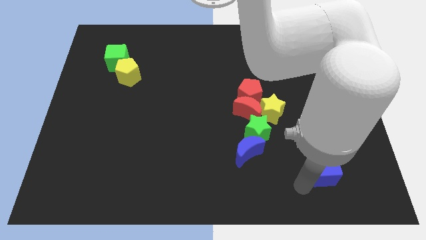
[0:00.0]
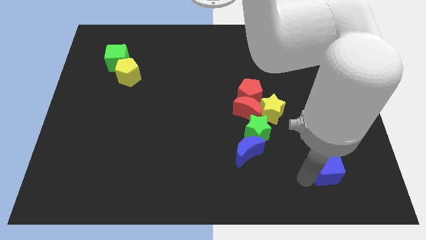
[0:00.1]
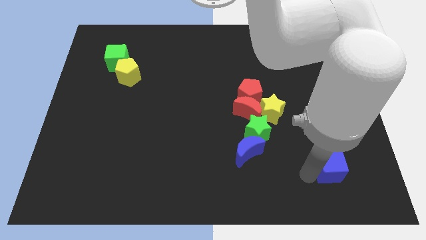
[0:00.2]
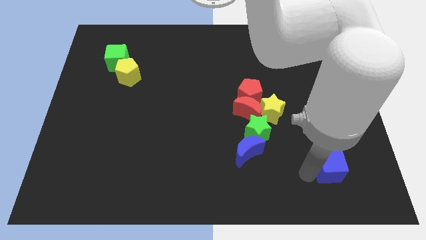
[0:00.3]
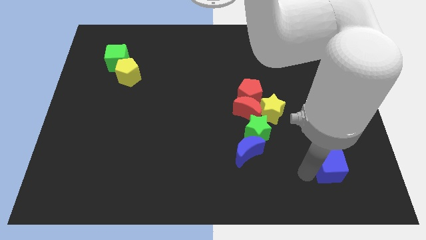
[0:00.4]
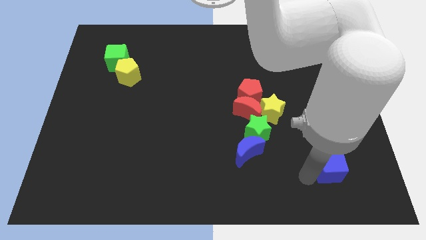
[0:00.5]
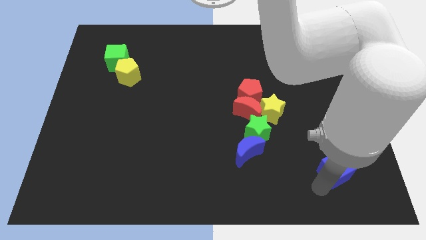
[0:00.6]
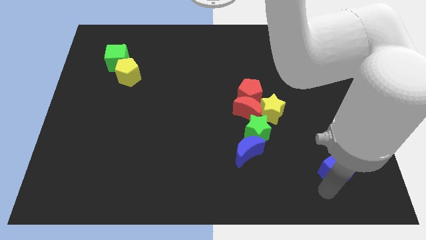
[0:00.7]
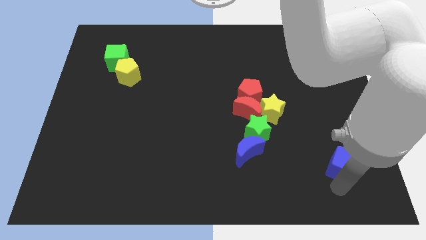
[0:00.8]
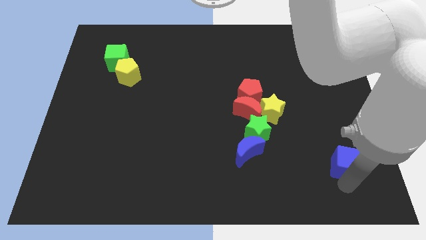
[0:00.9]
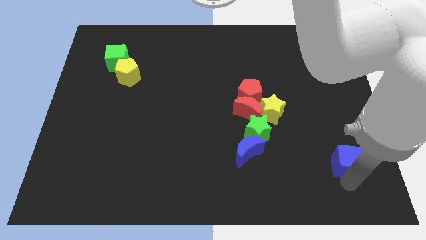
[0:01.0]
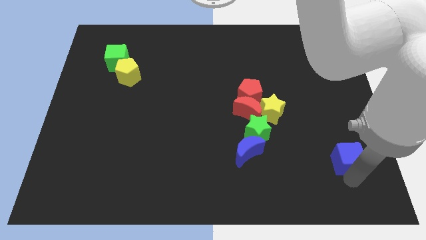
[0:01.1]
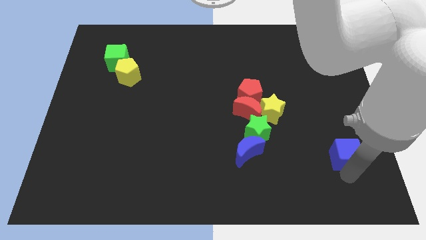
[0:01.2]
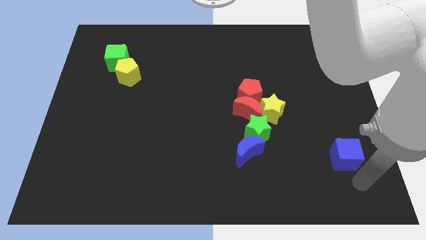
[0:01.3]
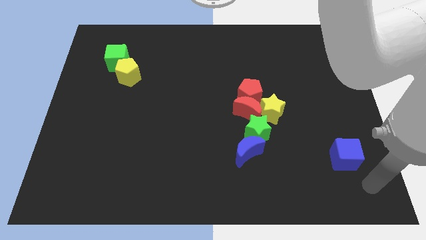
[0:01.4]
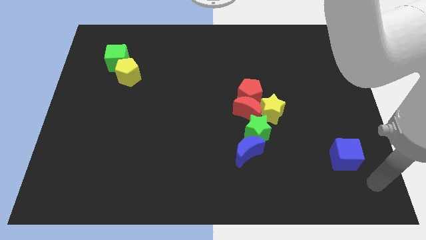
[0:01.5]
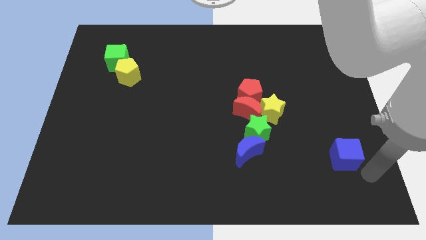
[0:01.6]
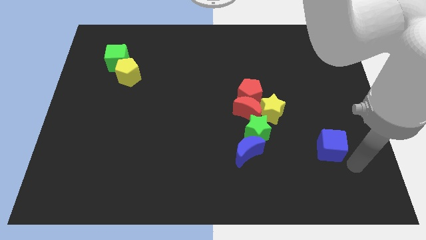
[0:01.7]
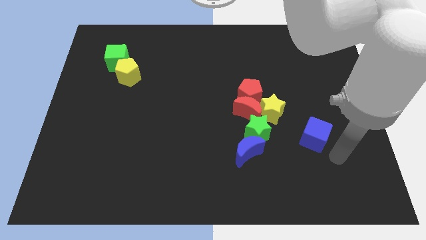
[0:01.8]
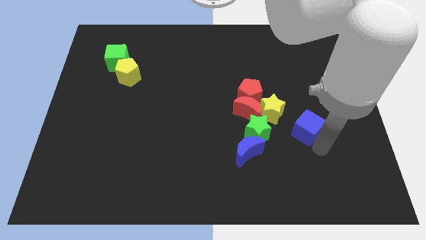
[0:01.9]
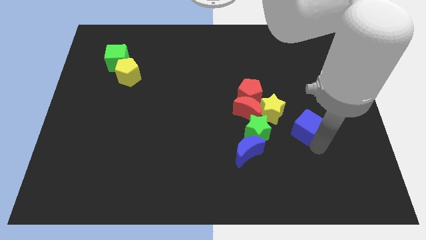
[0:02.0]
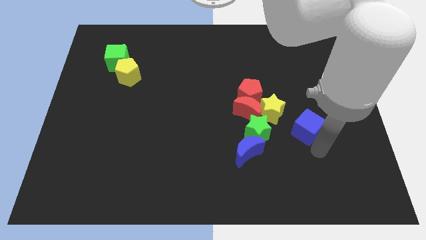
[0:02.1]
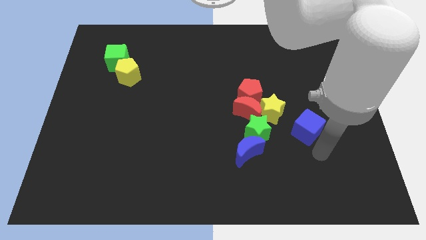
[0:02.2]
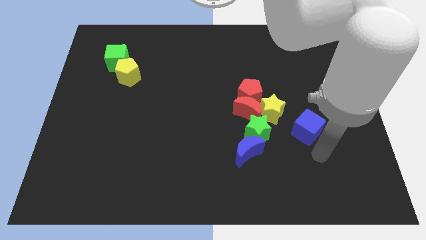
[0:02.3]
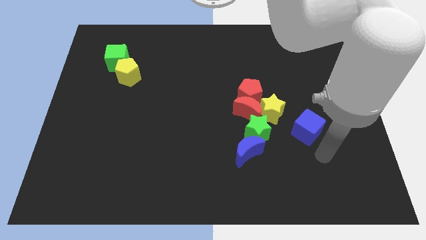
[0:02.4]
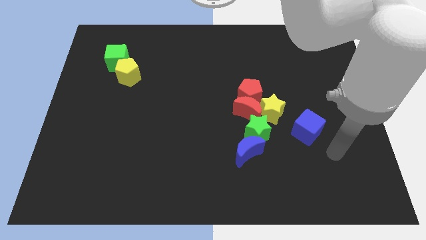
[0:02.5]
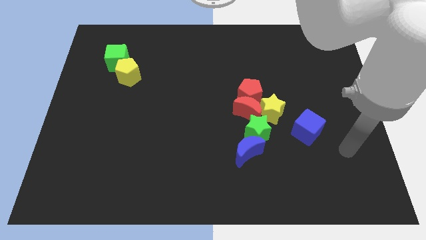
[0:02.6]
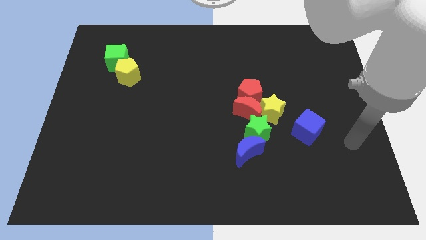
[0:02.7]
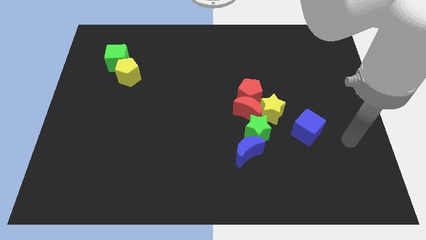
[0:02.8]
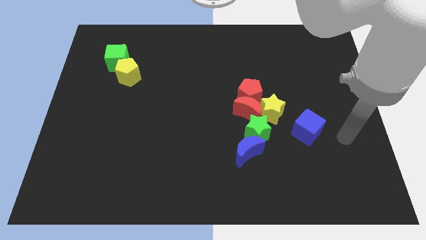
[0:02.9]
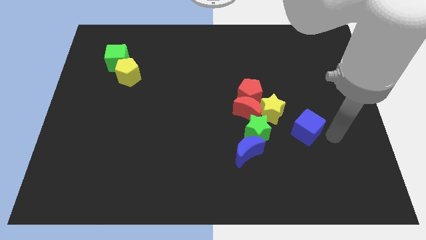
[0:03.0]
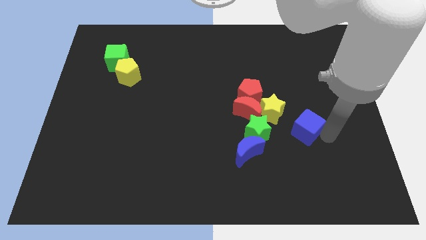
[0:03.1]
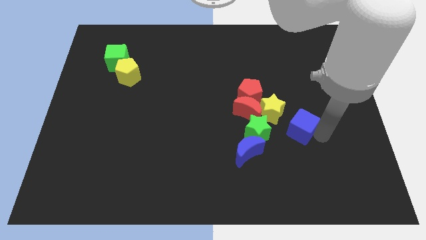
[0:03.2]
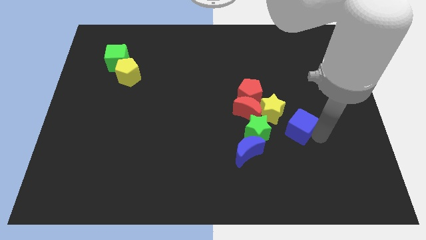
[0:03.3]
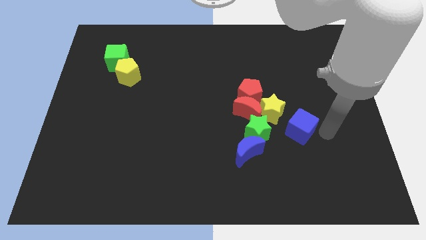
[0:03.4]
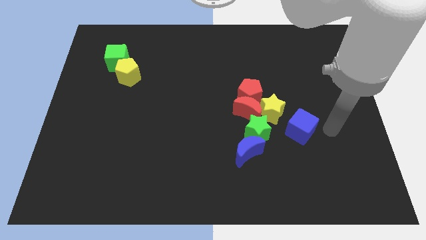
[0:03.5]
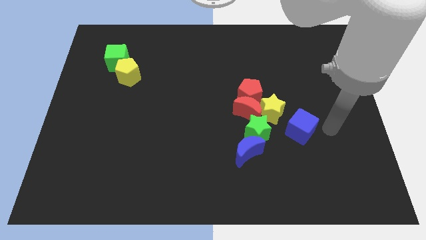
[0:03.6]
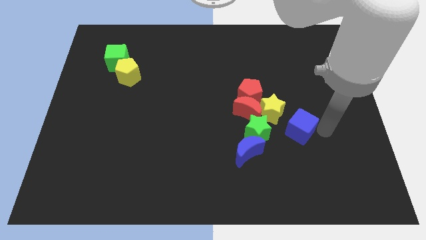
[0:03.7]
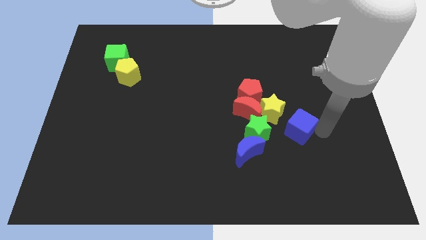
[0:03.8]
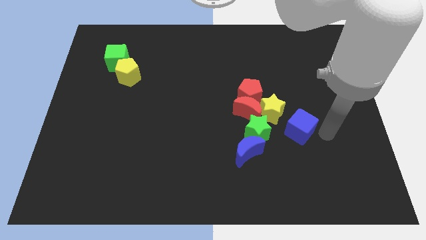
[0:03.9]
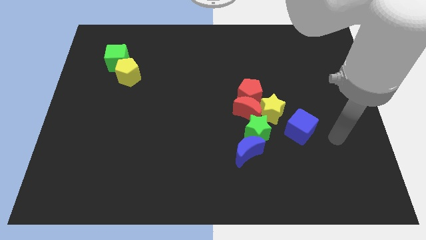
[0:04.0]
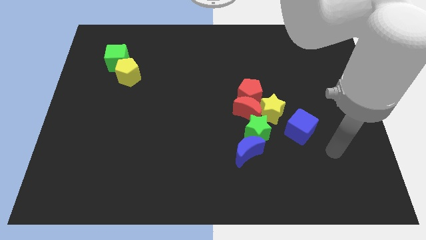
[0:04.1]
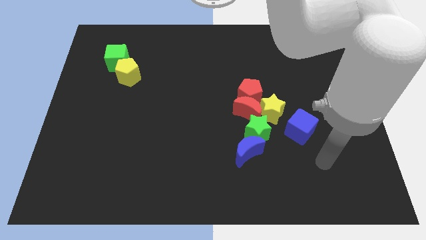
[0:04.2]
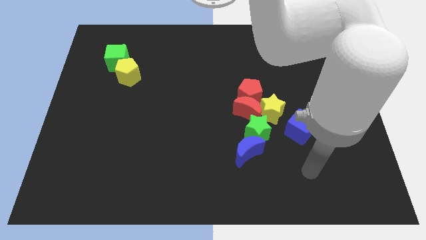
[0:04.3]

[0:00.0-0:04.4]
move the blue cube right to the green star

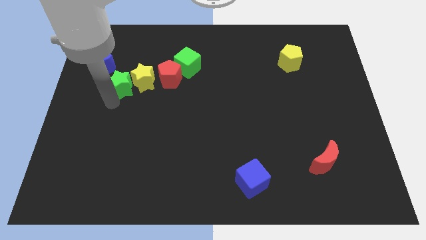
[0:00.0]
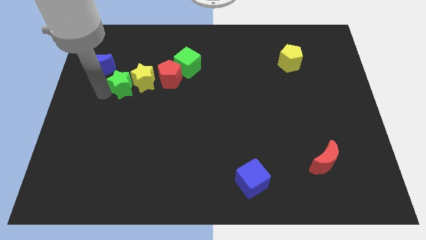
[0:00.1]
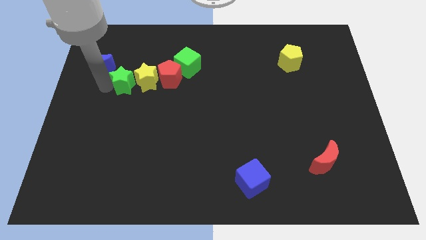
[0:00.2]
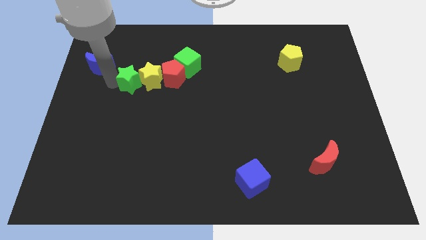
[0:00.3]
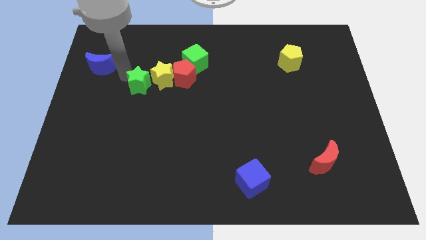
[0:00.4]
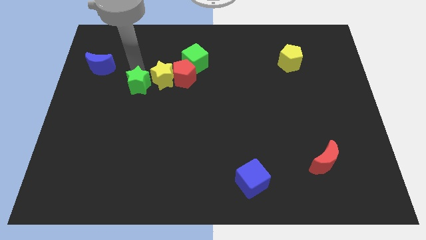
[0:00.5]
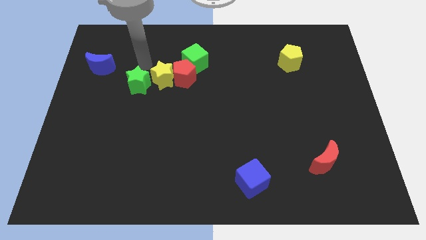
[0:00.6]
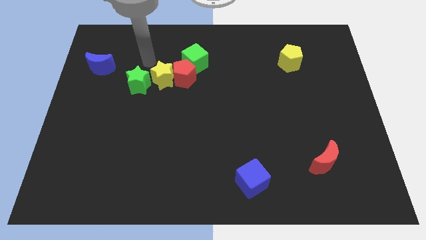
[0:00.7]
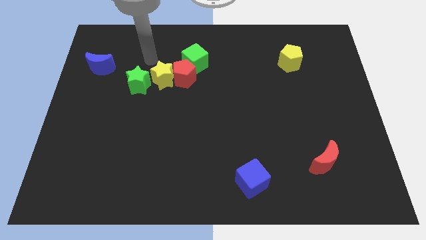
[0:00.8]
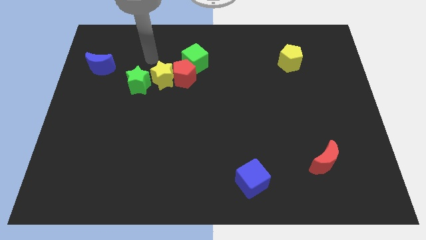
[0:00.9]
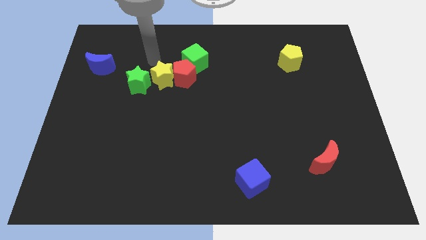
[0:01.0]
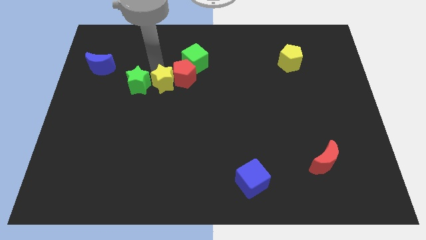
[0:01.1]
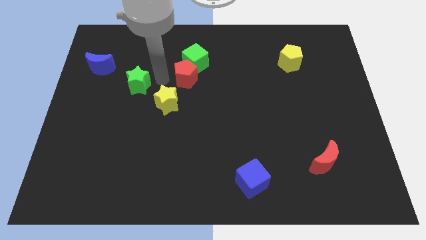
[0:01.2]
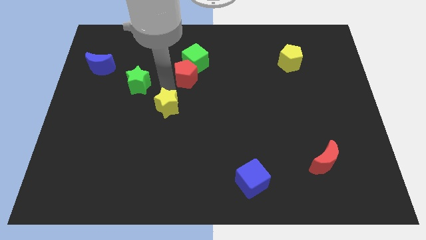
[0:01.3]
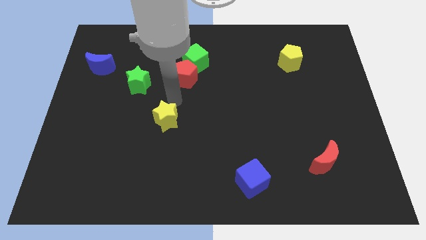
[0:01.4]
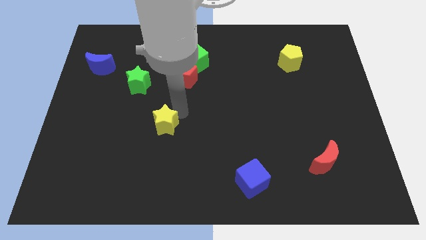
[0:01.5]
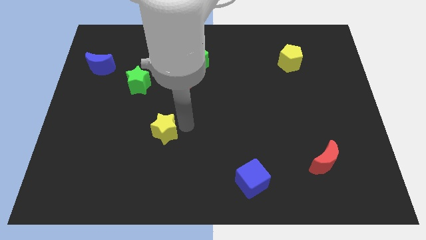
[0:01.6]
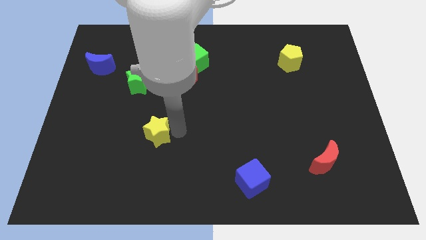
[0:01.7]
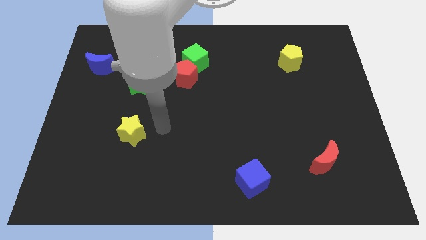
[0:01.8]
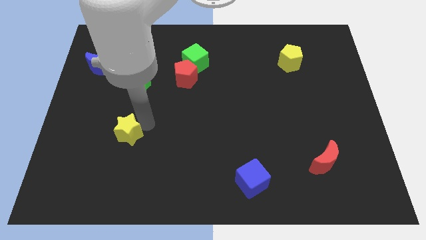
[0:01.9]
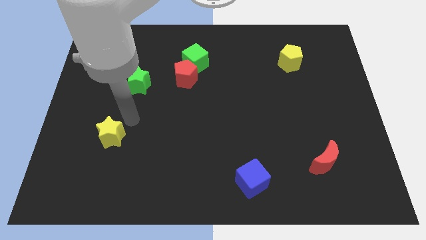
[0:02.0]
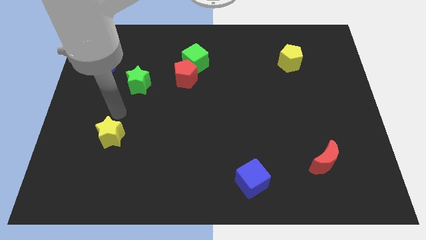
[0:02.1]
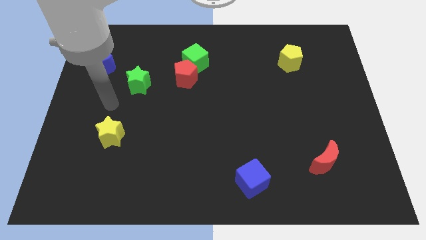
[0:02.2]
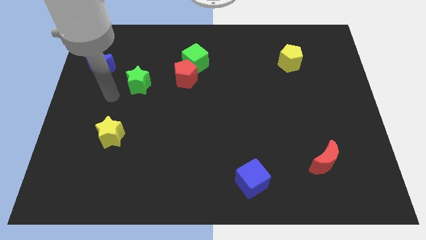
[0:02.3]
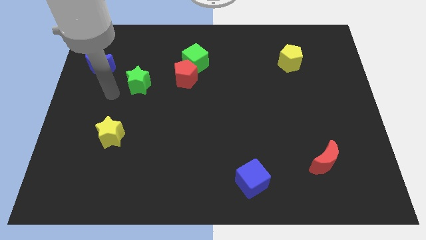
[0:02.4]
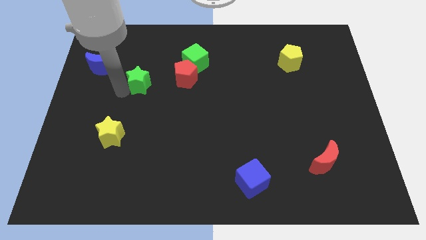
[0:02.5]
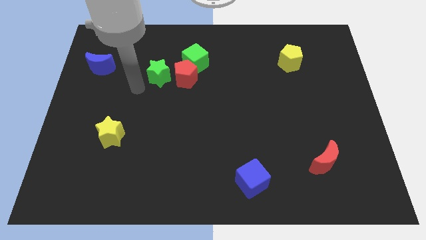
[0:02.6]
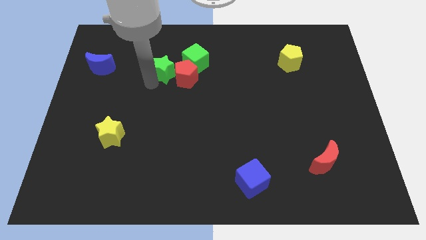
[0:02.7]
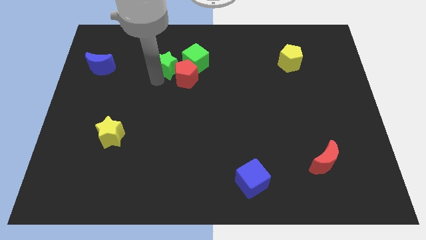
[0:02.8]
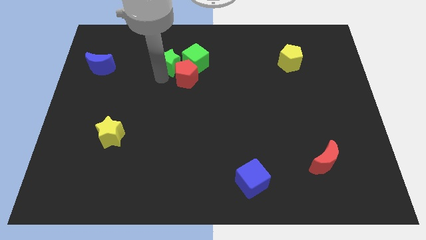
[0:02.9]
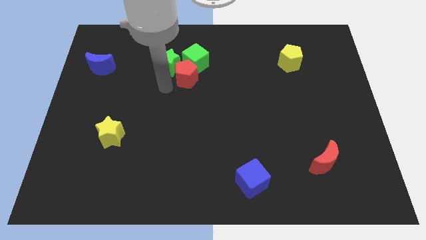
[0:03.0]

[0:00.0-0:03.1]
slide the yellow star slightly towards the bottom left center

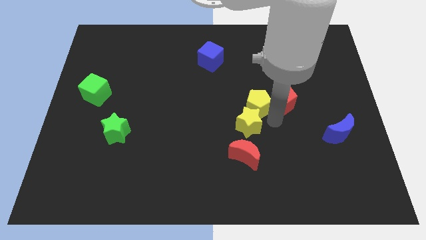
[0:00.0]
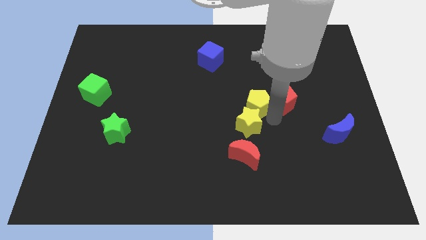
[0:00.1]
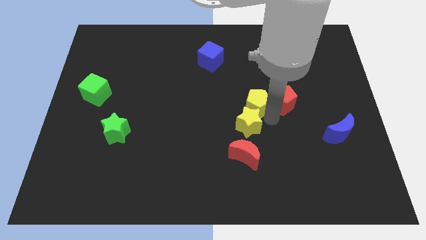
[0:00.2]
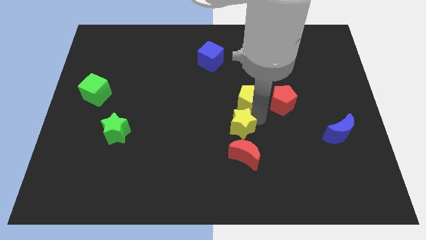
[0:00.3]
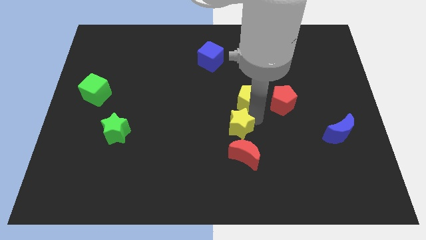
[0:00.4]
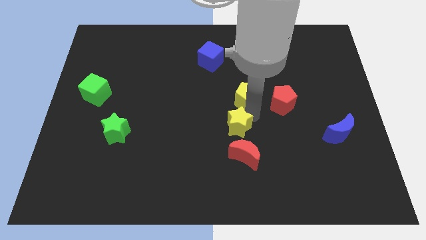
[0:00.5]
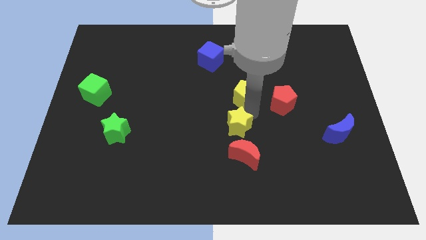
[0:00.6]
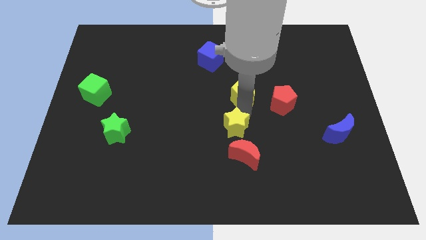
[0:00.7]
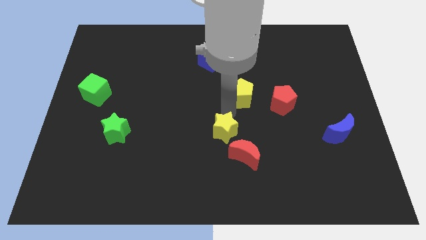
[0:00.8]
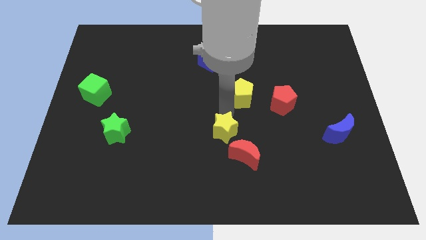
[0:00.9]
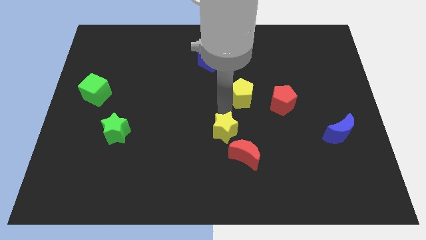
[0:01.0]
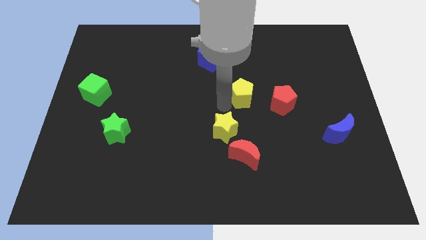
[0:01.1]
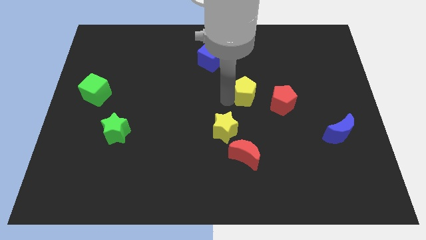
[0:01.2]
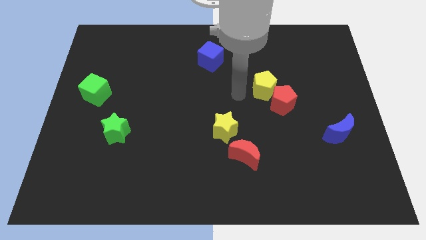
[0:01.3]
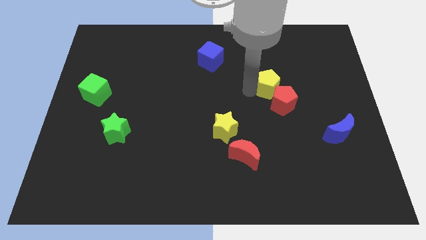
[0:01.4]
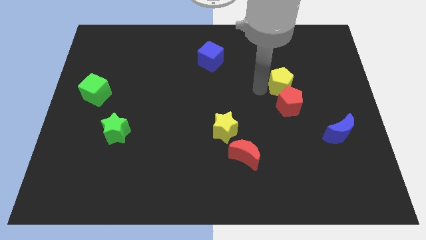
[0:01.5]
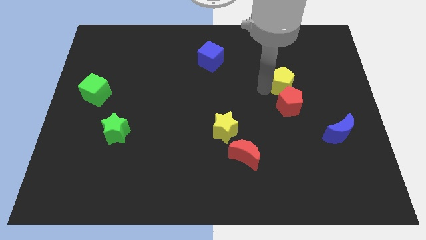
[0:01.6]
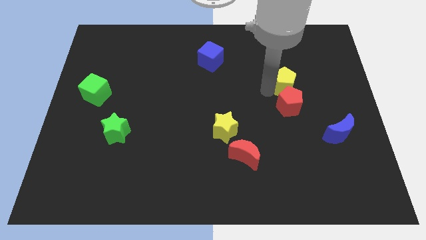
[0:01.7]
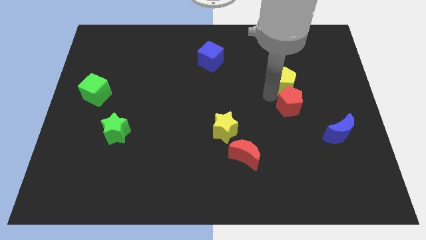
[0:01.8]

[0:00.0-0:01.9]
move the yellow pentagon to the top of red pentagon
